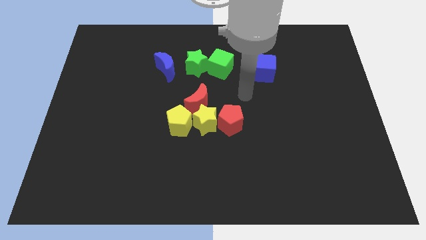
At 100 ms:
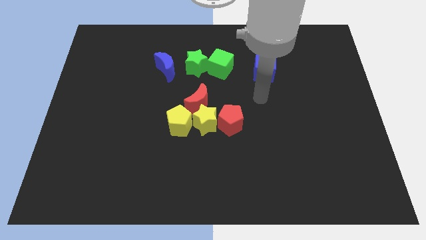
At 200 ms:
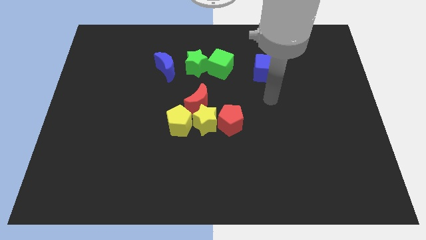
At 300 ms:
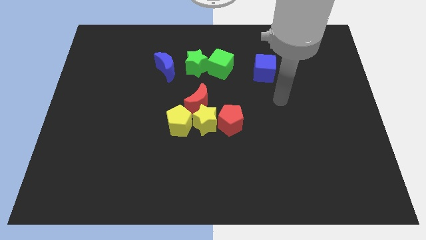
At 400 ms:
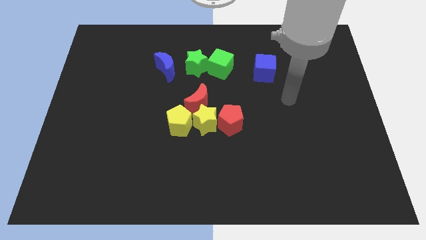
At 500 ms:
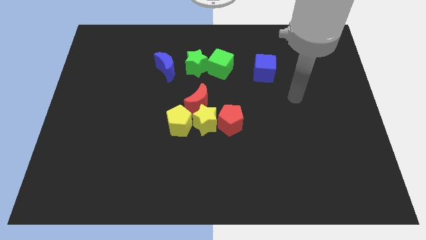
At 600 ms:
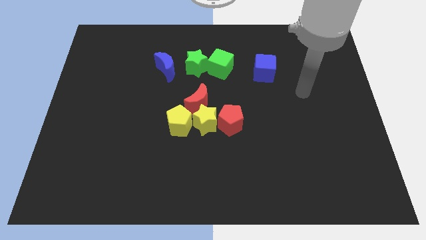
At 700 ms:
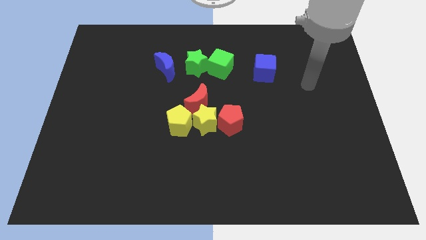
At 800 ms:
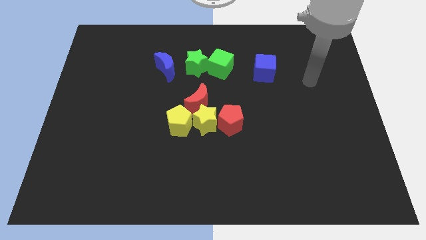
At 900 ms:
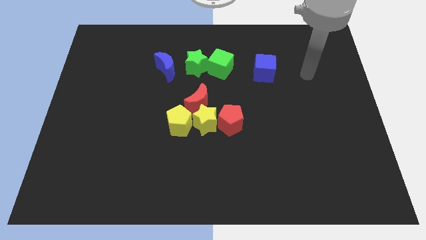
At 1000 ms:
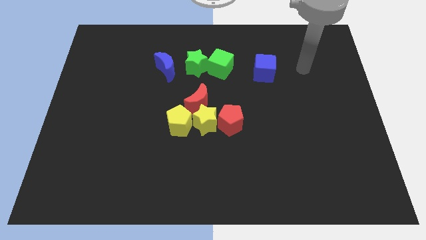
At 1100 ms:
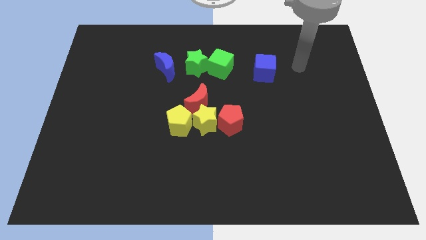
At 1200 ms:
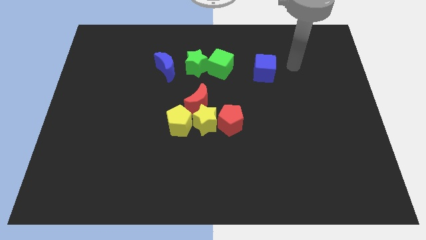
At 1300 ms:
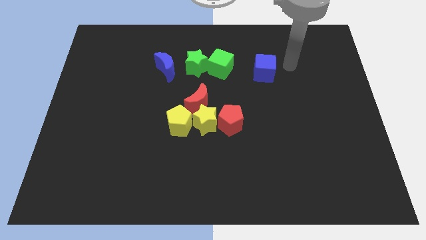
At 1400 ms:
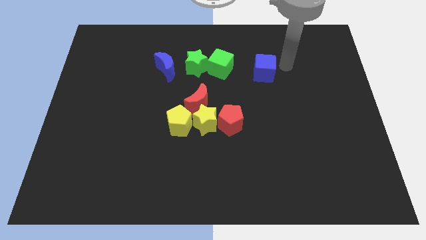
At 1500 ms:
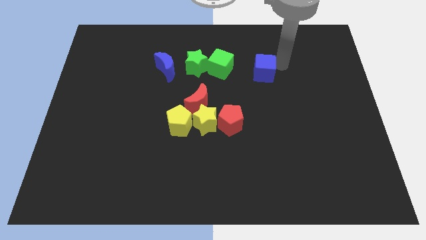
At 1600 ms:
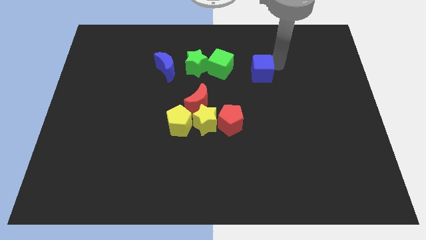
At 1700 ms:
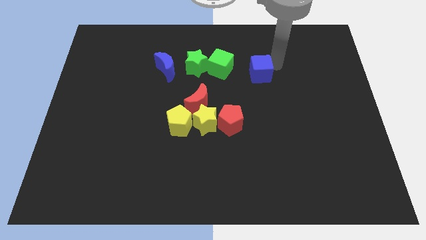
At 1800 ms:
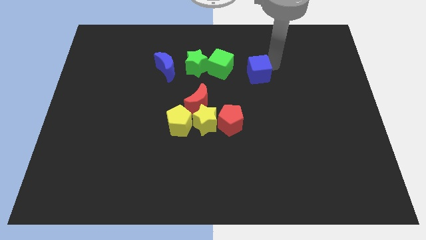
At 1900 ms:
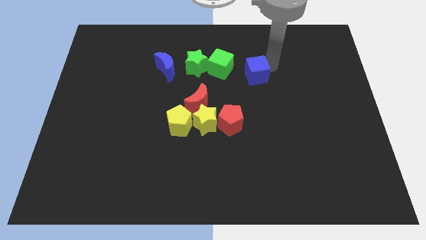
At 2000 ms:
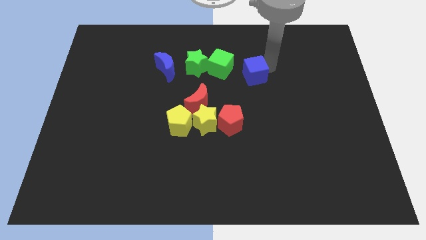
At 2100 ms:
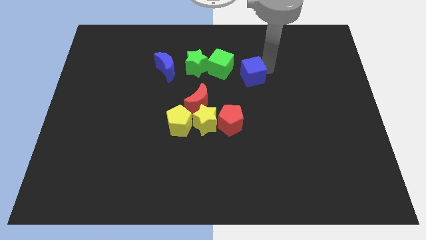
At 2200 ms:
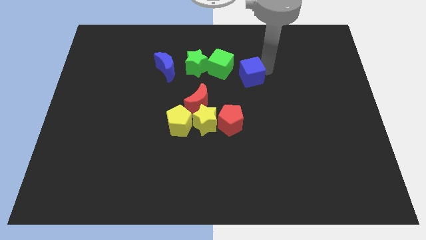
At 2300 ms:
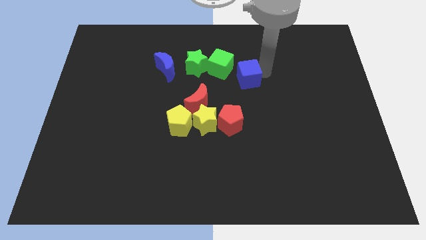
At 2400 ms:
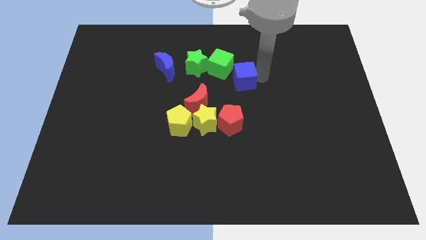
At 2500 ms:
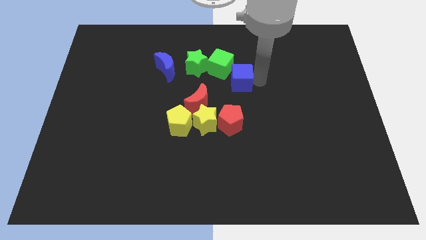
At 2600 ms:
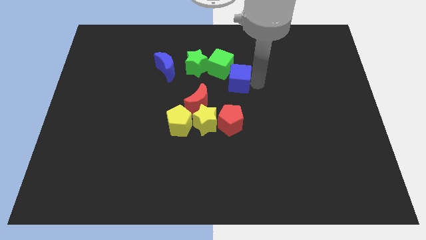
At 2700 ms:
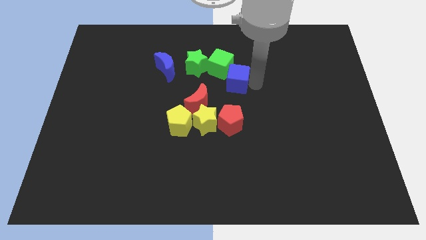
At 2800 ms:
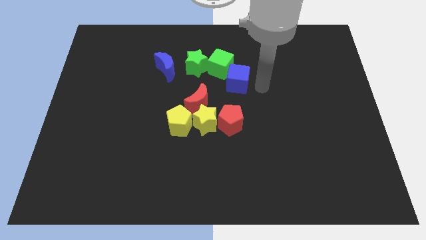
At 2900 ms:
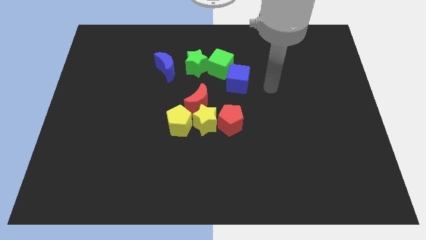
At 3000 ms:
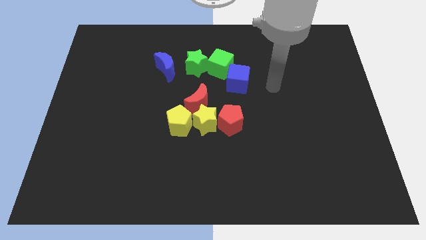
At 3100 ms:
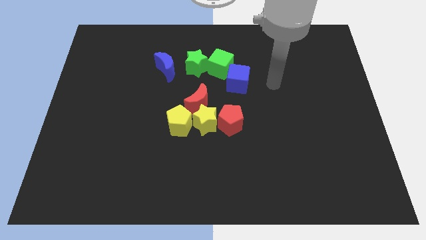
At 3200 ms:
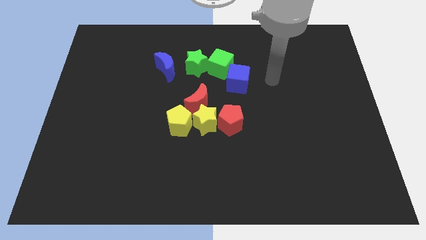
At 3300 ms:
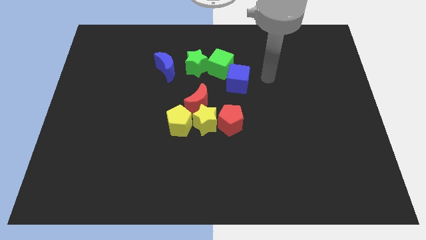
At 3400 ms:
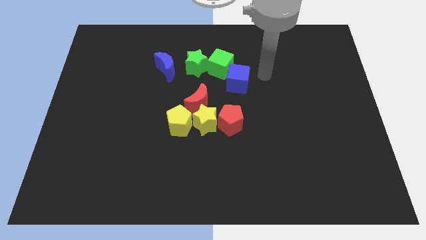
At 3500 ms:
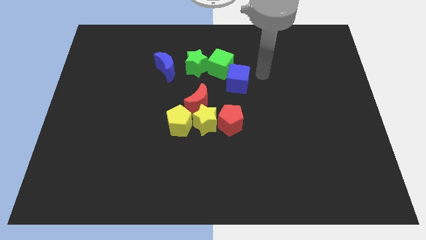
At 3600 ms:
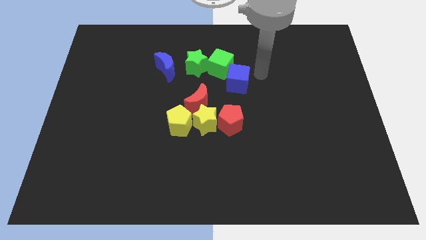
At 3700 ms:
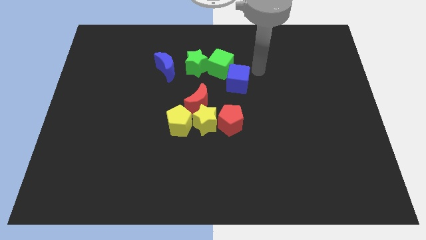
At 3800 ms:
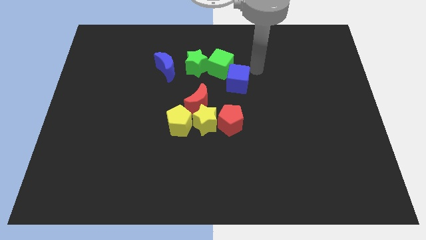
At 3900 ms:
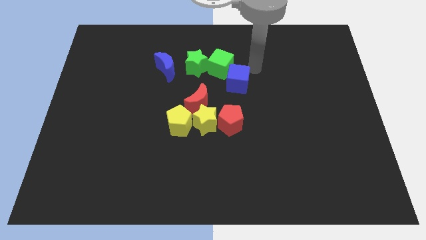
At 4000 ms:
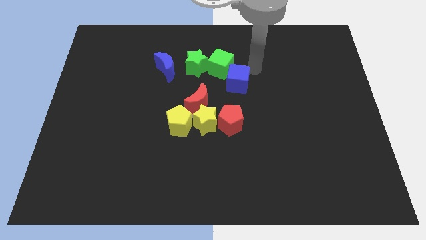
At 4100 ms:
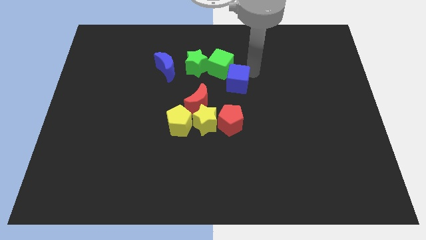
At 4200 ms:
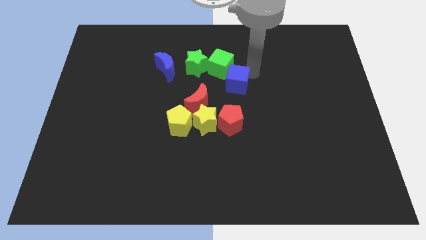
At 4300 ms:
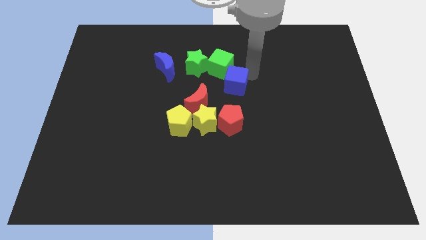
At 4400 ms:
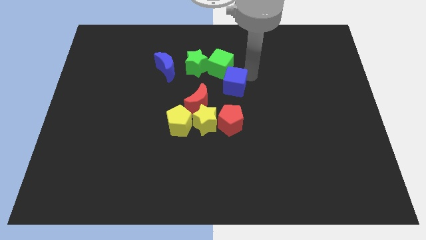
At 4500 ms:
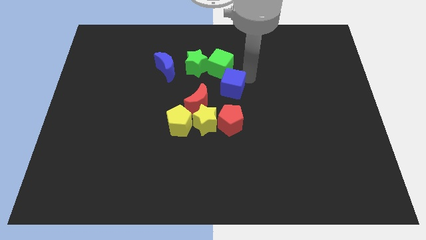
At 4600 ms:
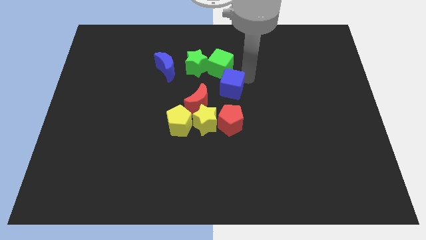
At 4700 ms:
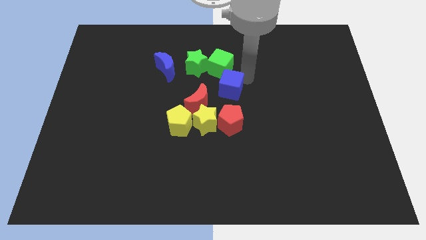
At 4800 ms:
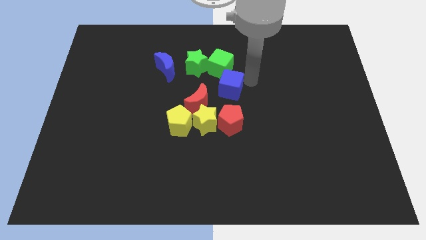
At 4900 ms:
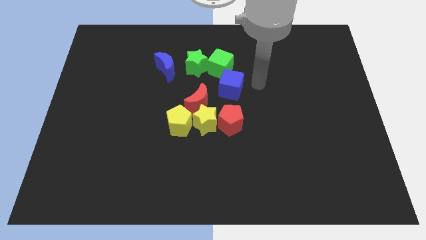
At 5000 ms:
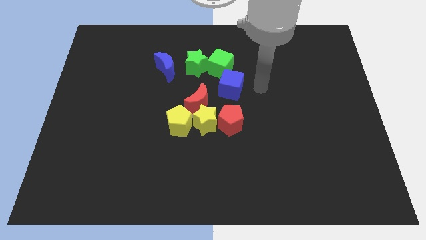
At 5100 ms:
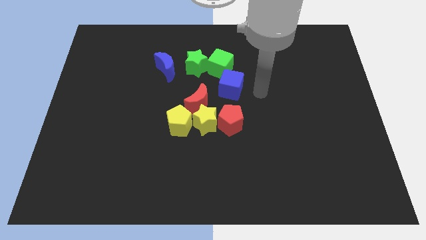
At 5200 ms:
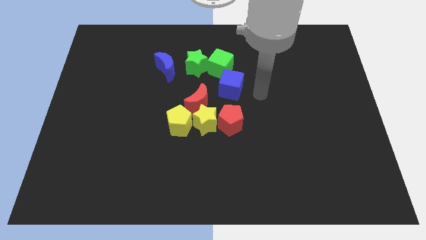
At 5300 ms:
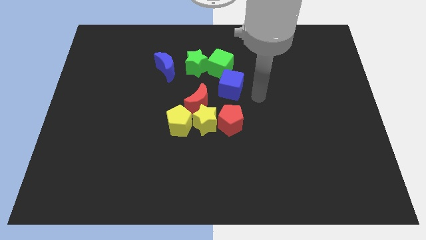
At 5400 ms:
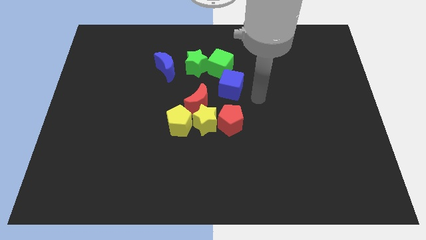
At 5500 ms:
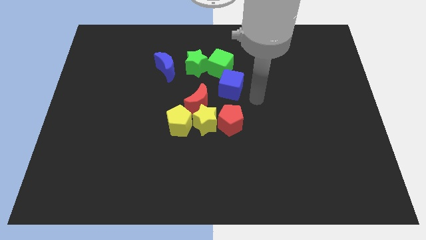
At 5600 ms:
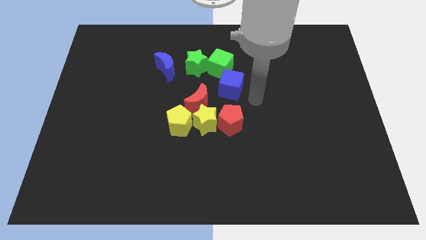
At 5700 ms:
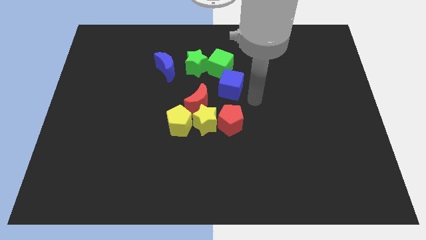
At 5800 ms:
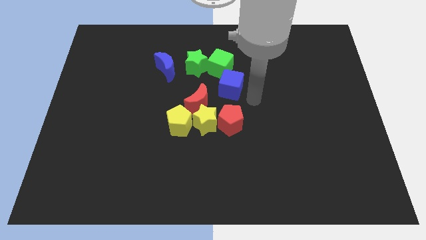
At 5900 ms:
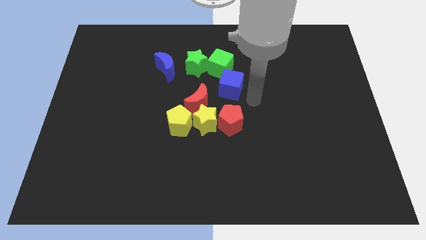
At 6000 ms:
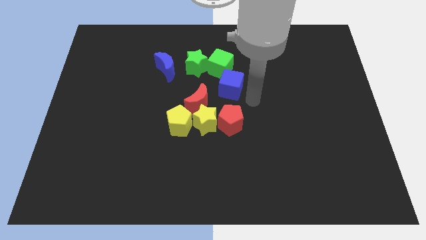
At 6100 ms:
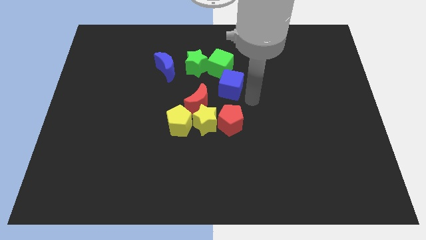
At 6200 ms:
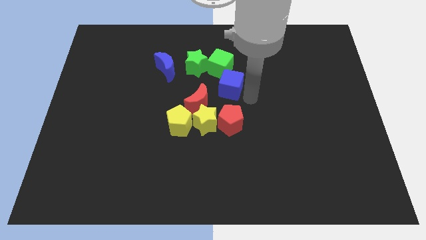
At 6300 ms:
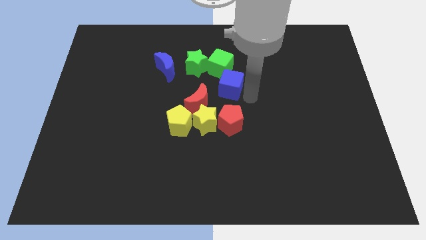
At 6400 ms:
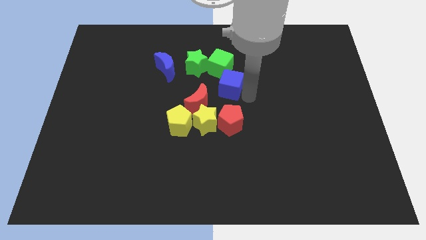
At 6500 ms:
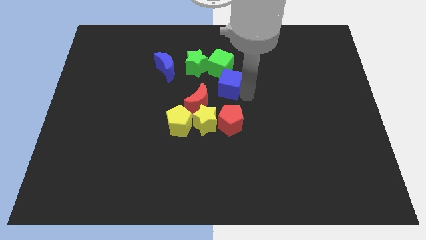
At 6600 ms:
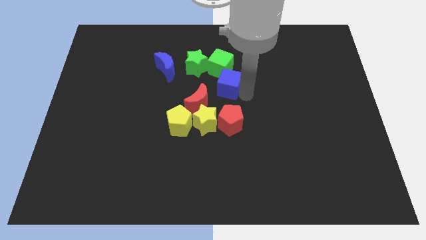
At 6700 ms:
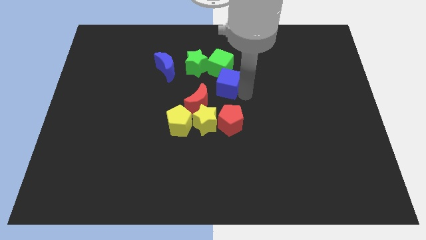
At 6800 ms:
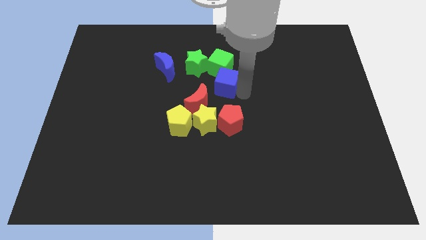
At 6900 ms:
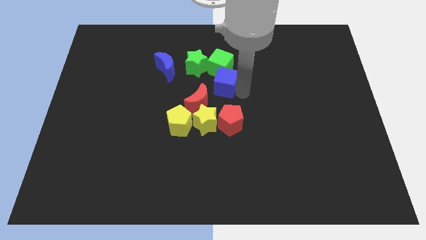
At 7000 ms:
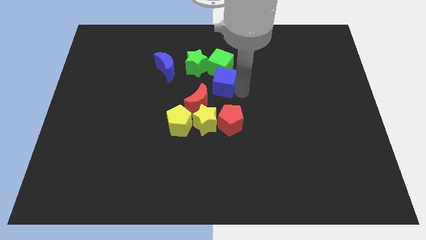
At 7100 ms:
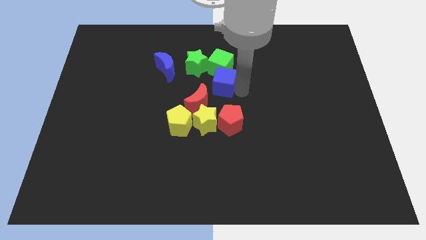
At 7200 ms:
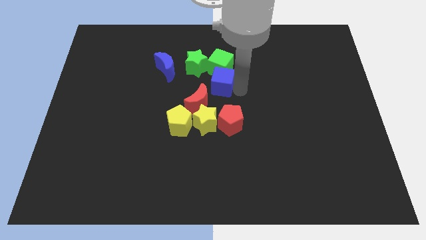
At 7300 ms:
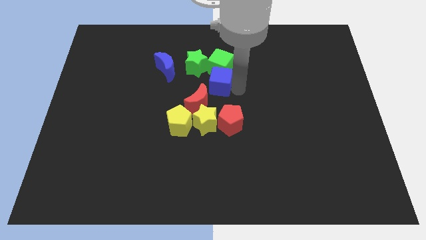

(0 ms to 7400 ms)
push the blue cube below the green cube

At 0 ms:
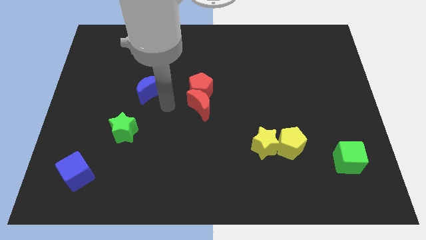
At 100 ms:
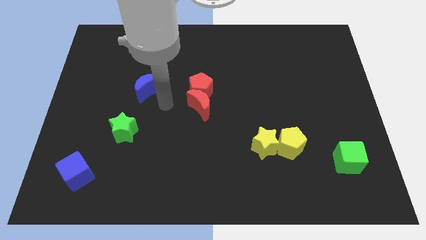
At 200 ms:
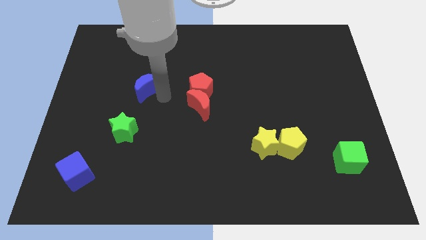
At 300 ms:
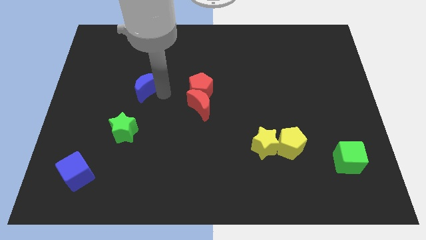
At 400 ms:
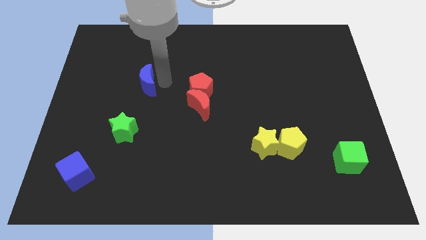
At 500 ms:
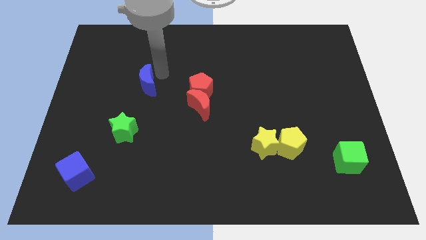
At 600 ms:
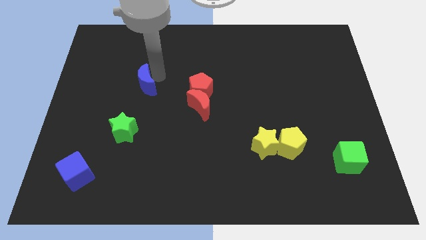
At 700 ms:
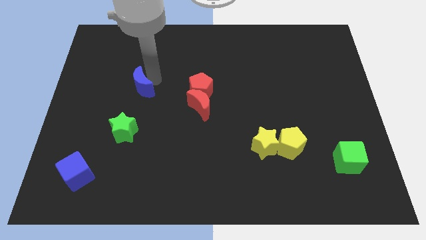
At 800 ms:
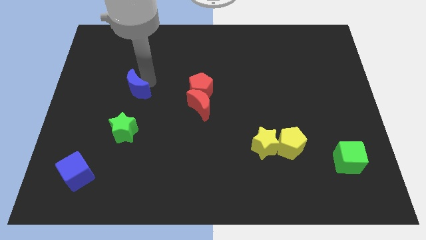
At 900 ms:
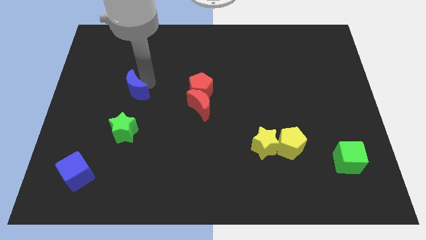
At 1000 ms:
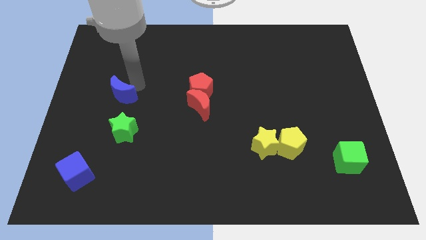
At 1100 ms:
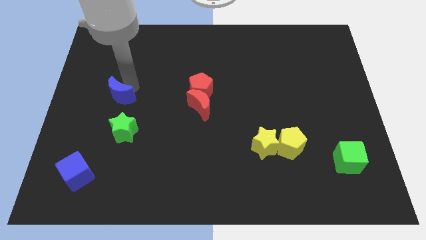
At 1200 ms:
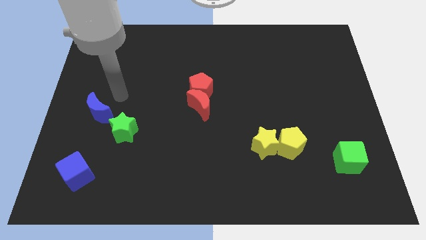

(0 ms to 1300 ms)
move the blue crescent vertically above the blue cube

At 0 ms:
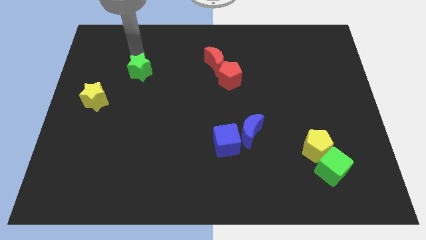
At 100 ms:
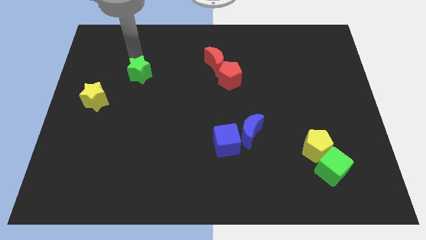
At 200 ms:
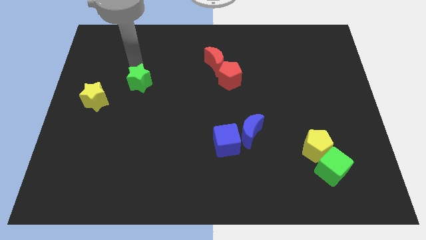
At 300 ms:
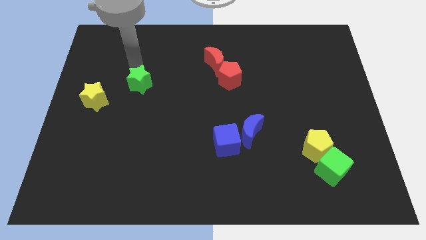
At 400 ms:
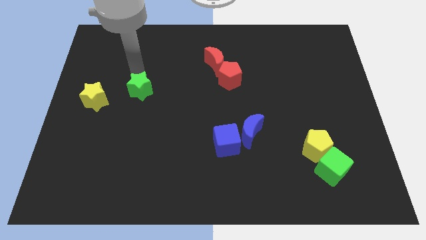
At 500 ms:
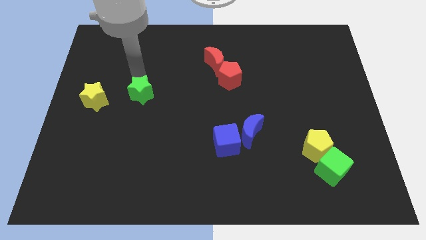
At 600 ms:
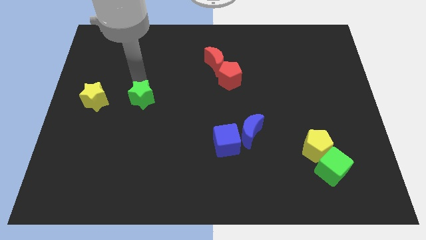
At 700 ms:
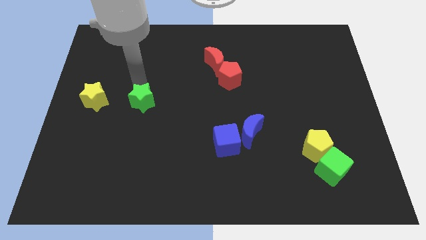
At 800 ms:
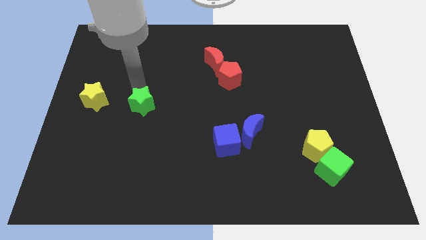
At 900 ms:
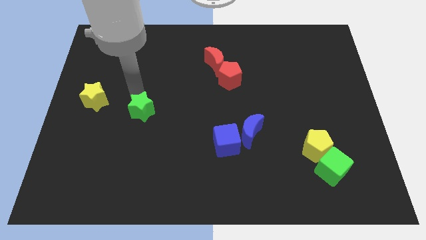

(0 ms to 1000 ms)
push the green star to the bottom of the board
